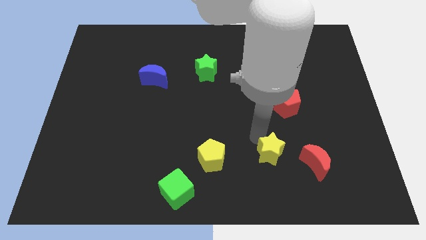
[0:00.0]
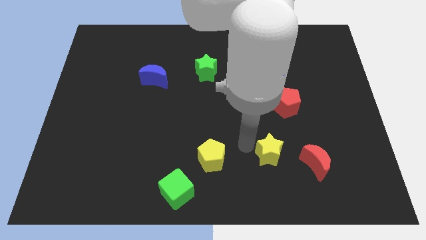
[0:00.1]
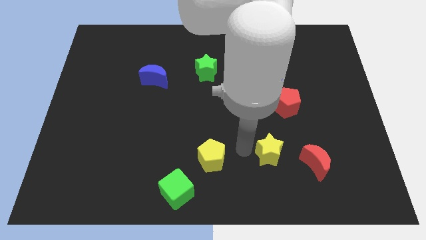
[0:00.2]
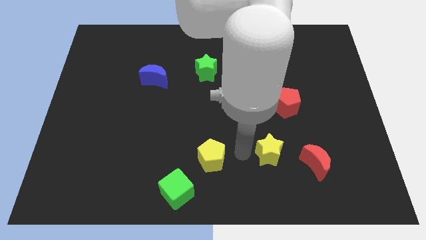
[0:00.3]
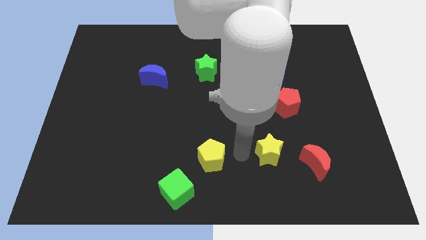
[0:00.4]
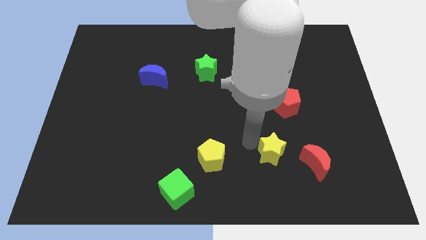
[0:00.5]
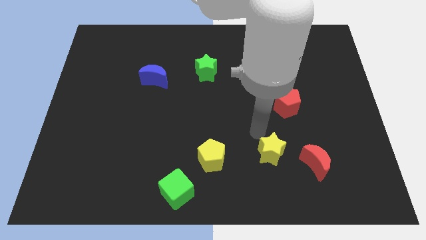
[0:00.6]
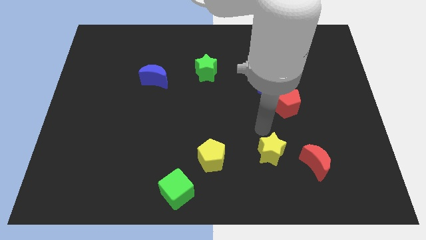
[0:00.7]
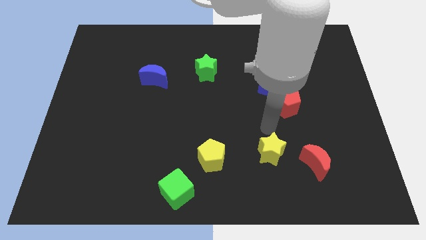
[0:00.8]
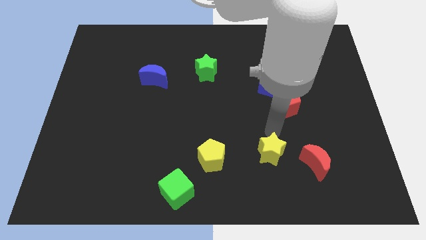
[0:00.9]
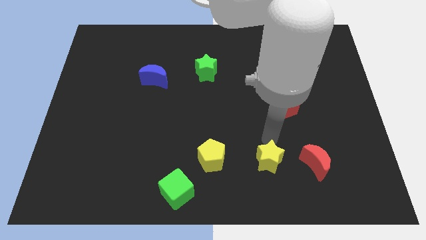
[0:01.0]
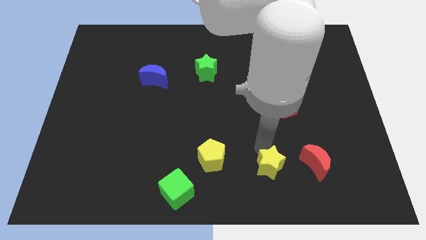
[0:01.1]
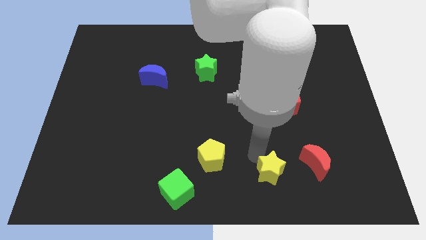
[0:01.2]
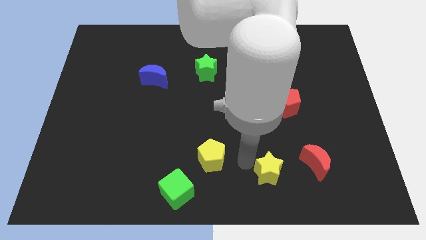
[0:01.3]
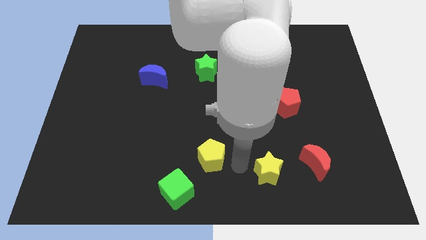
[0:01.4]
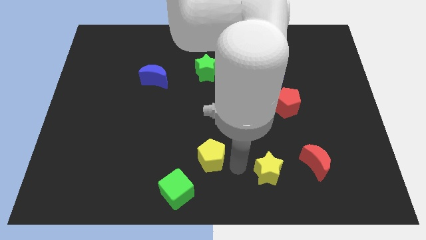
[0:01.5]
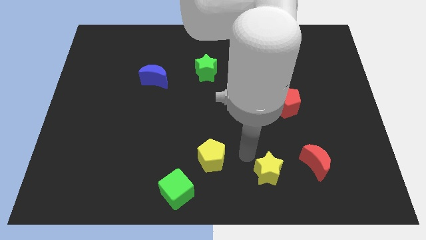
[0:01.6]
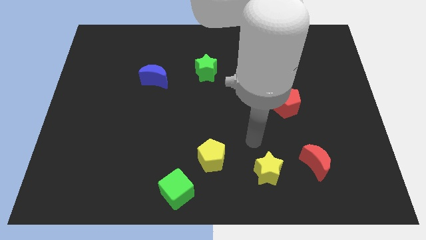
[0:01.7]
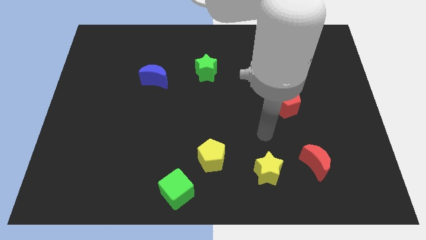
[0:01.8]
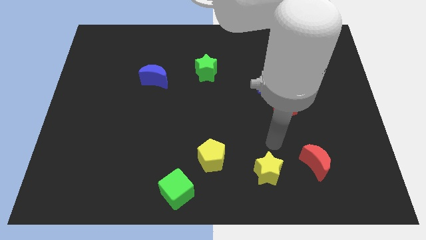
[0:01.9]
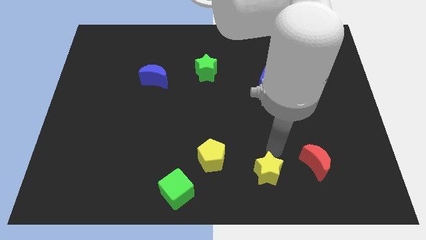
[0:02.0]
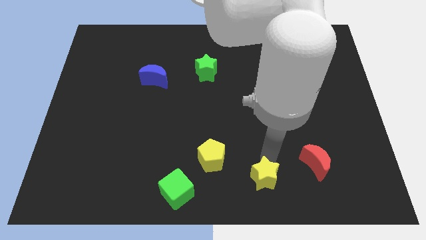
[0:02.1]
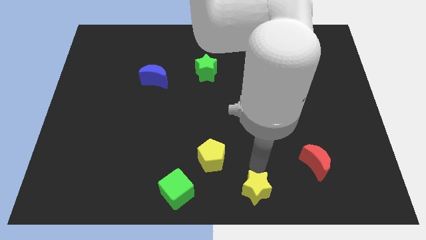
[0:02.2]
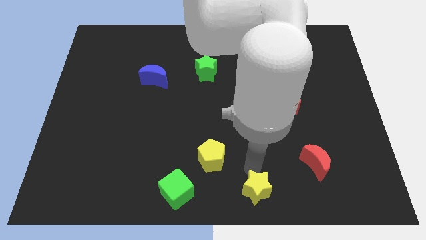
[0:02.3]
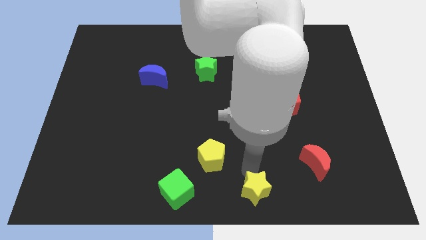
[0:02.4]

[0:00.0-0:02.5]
place the yellow star to the bottom center

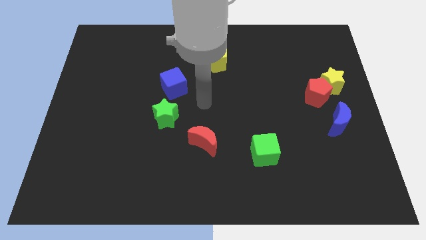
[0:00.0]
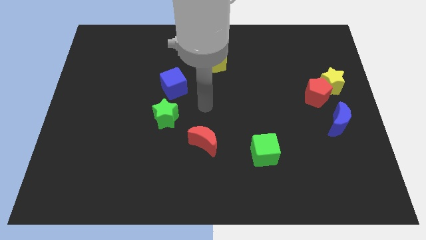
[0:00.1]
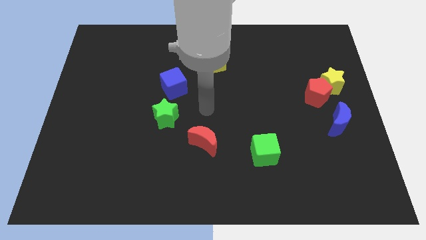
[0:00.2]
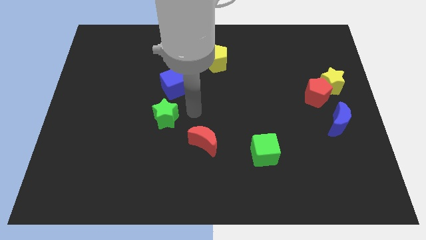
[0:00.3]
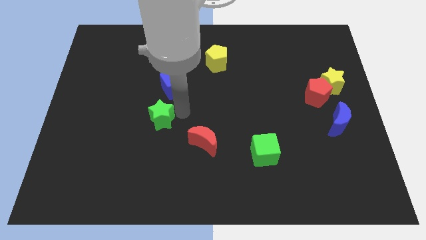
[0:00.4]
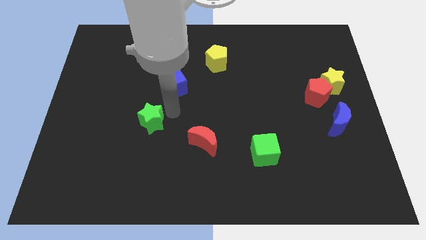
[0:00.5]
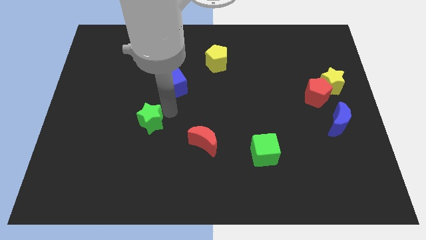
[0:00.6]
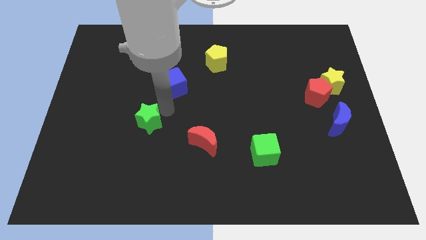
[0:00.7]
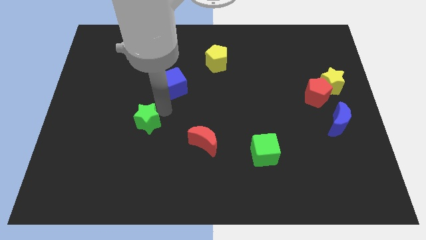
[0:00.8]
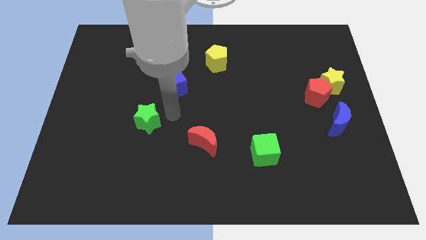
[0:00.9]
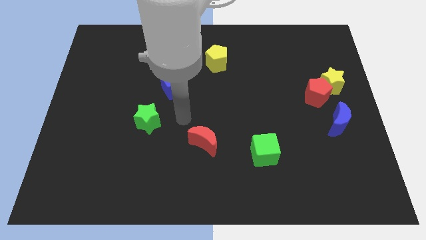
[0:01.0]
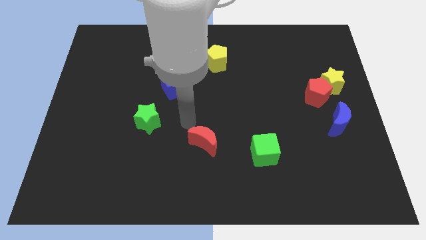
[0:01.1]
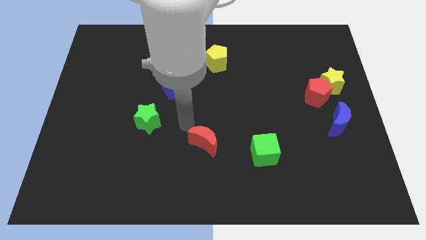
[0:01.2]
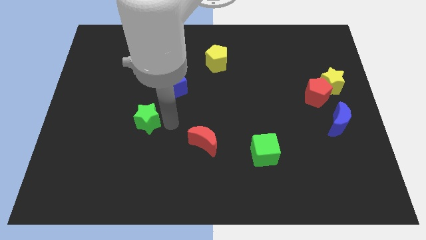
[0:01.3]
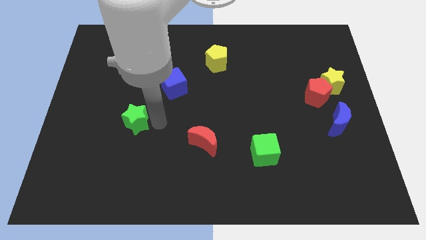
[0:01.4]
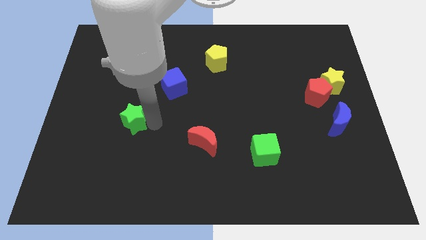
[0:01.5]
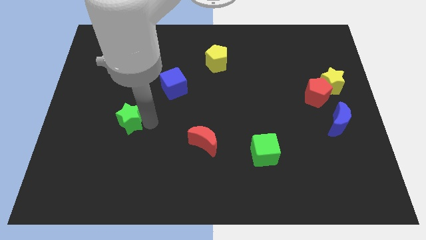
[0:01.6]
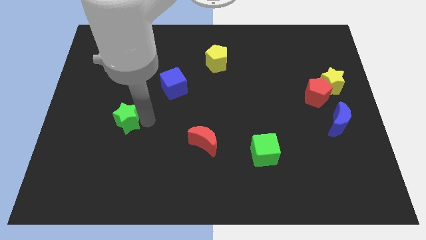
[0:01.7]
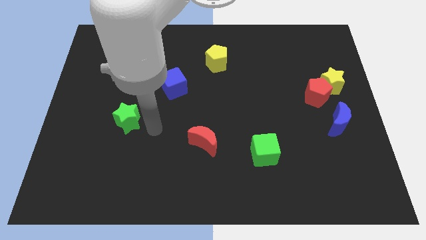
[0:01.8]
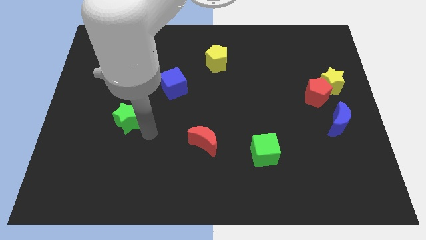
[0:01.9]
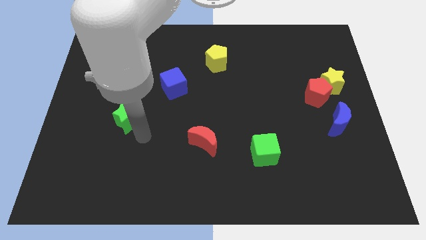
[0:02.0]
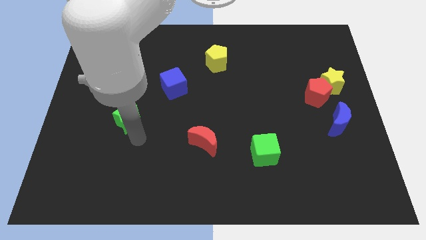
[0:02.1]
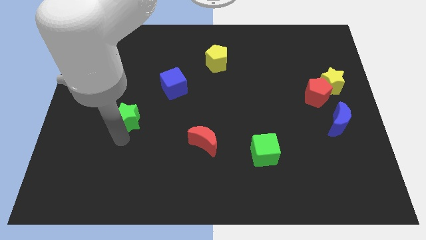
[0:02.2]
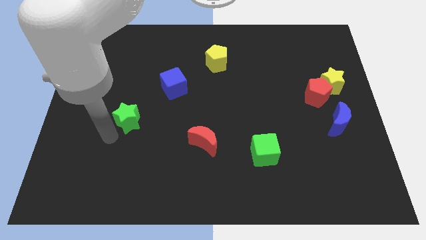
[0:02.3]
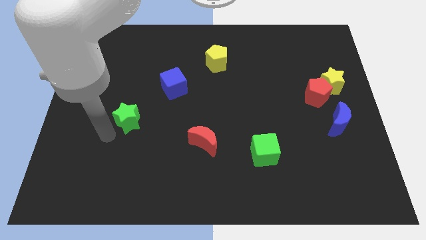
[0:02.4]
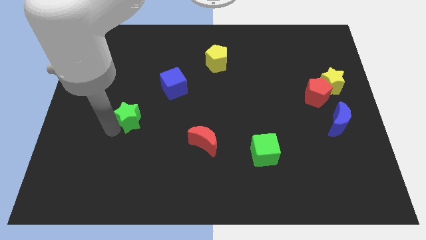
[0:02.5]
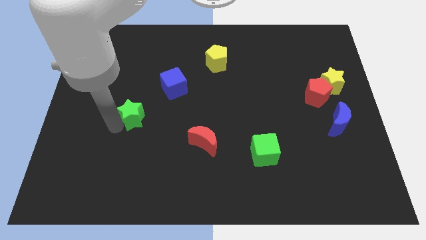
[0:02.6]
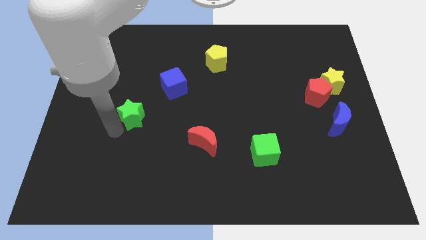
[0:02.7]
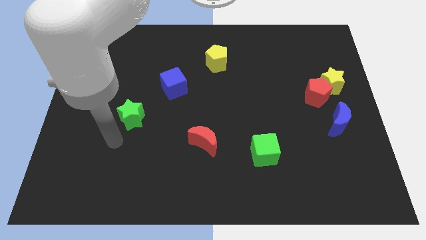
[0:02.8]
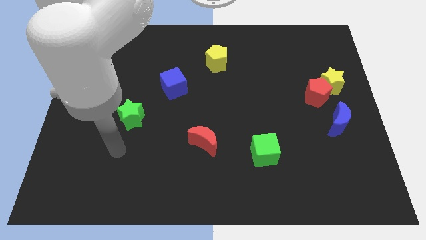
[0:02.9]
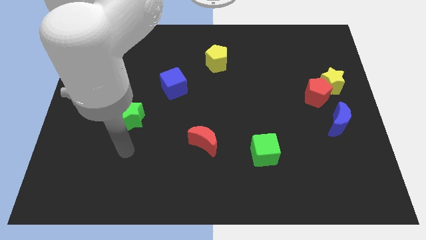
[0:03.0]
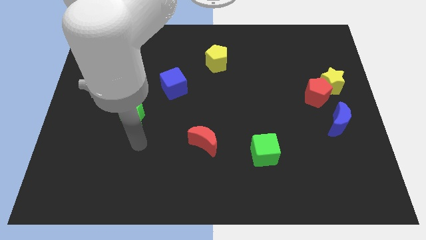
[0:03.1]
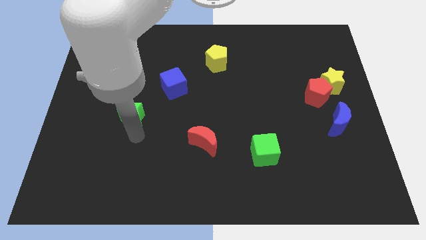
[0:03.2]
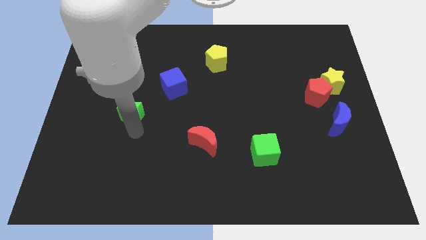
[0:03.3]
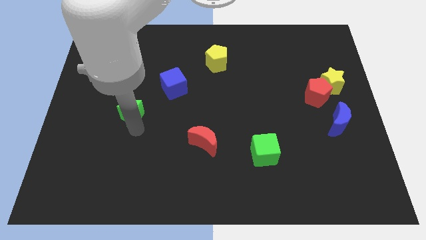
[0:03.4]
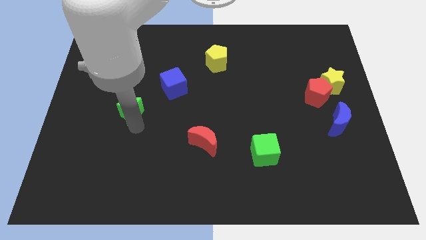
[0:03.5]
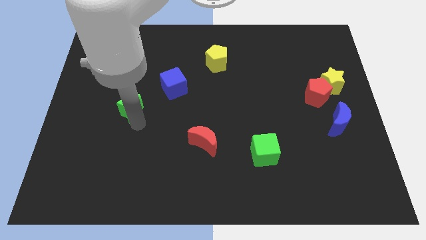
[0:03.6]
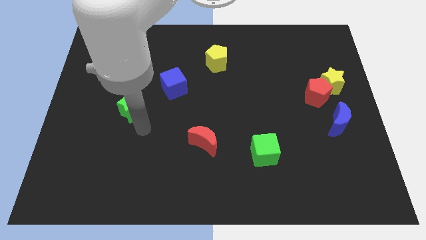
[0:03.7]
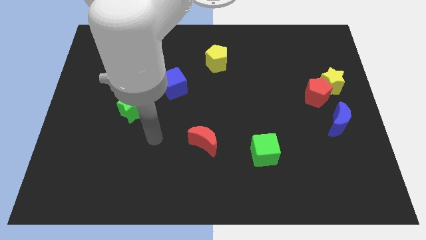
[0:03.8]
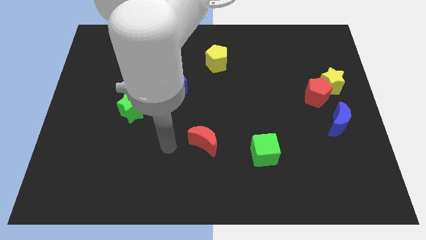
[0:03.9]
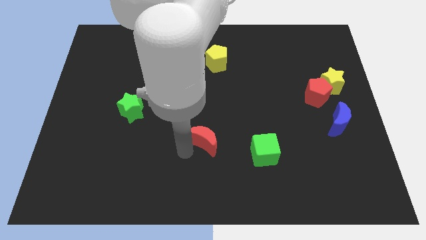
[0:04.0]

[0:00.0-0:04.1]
separate the star from the blue cube

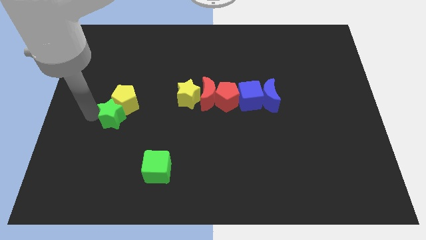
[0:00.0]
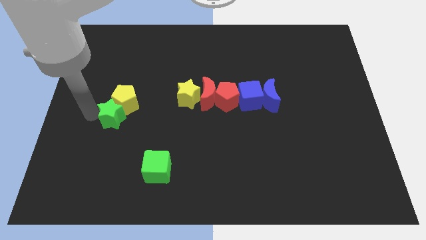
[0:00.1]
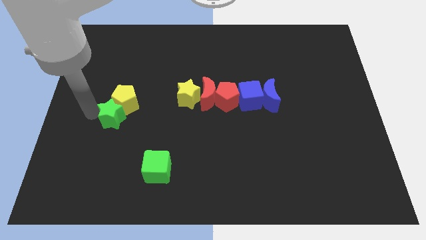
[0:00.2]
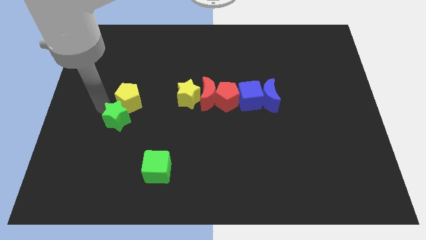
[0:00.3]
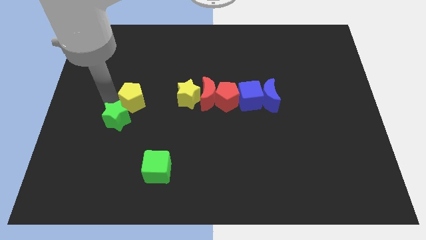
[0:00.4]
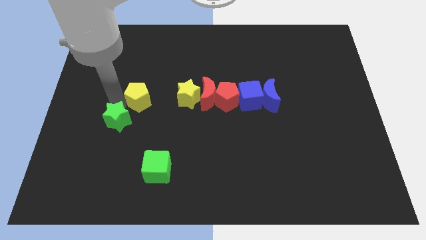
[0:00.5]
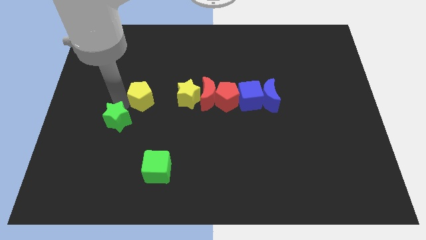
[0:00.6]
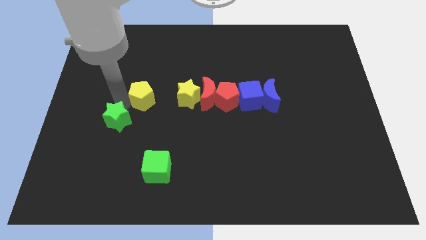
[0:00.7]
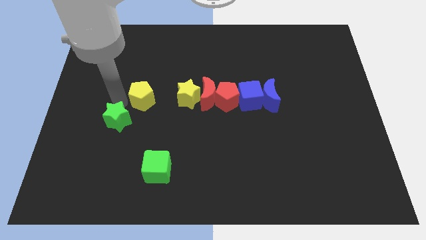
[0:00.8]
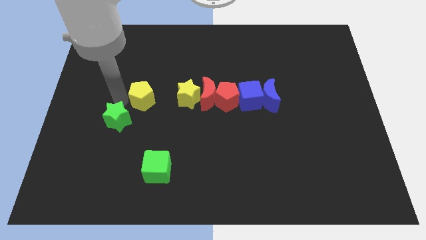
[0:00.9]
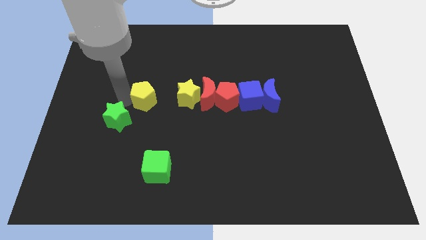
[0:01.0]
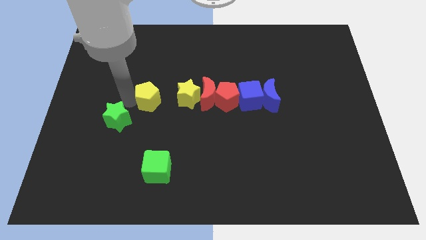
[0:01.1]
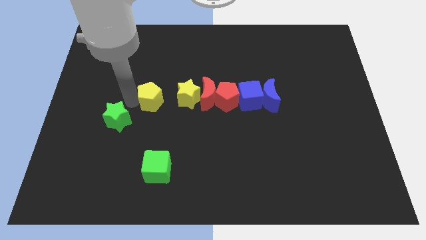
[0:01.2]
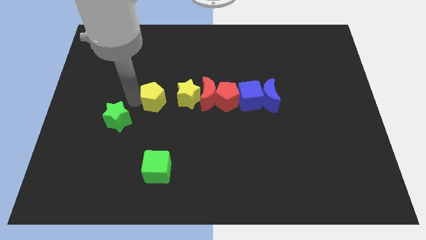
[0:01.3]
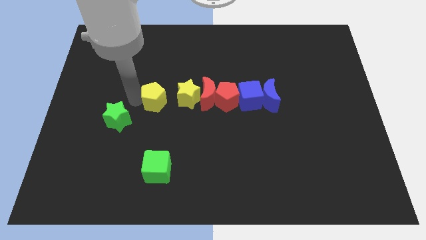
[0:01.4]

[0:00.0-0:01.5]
separate green star and the yellow pentagon

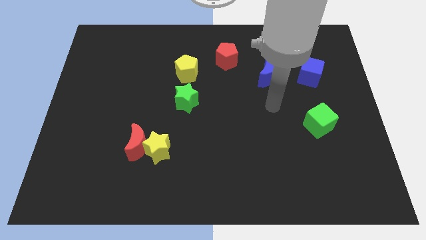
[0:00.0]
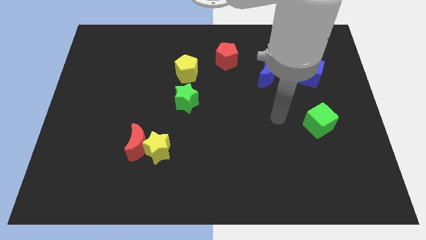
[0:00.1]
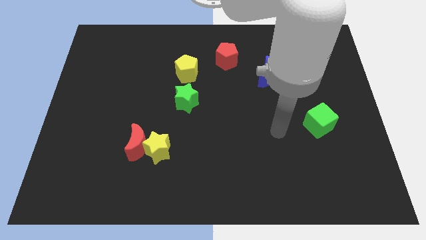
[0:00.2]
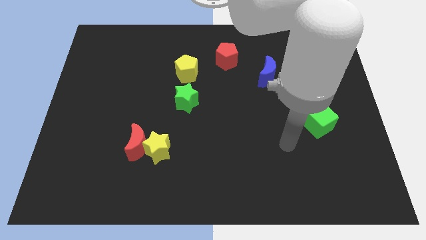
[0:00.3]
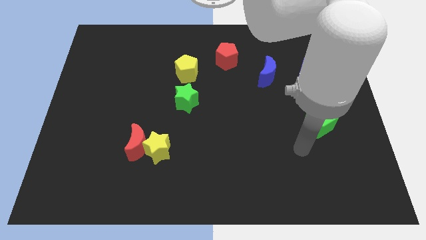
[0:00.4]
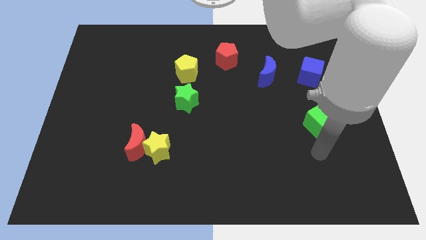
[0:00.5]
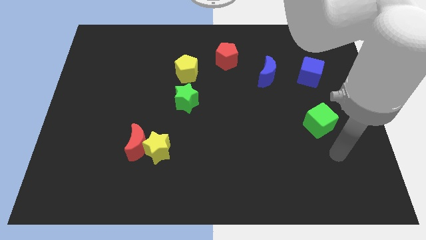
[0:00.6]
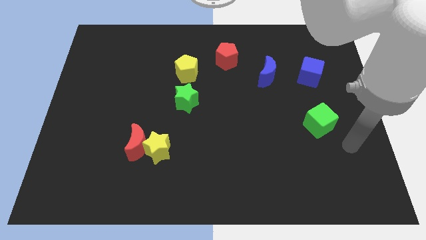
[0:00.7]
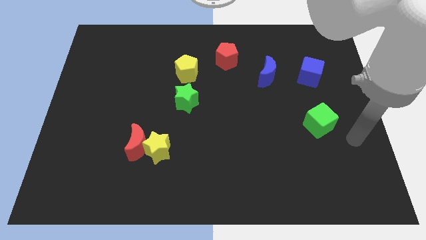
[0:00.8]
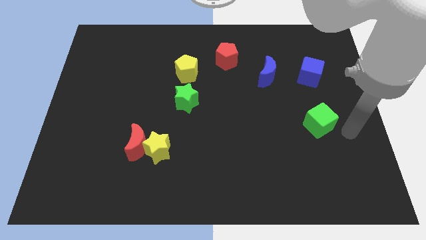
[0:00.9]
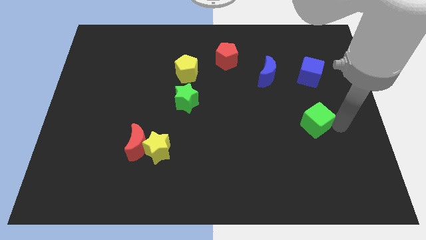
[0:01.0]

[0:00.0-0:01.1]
point your arm right to green cube
